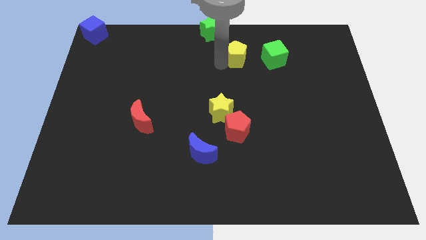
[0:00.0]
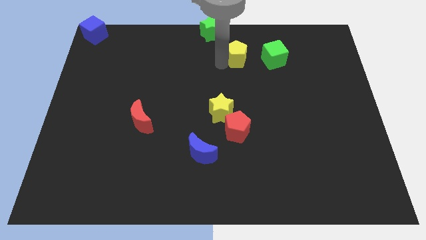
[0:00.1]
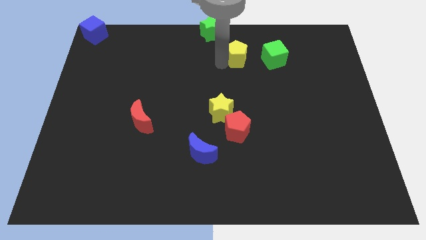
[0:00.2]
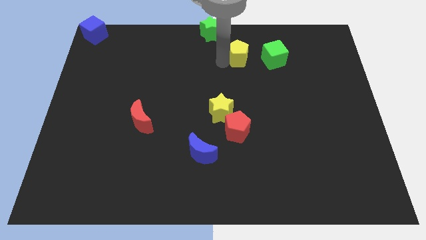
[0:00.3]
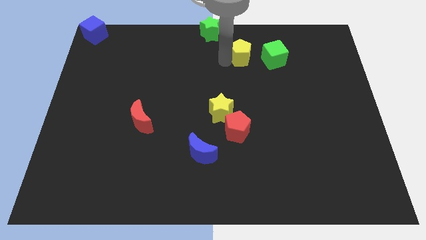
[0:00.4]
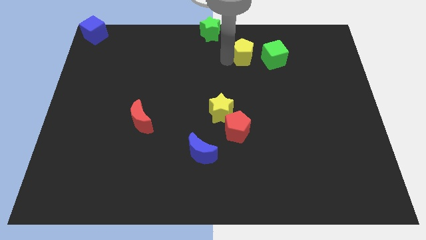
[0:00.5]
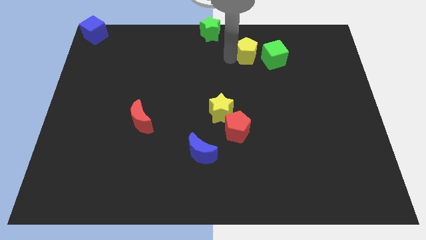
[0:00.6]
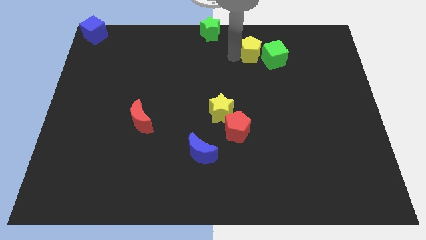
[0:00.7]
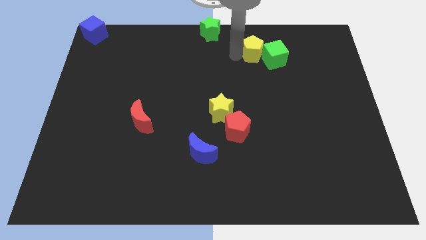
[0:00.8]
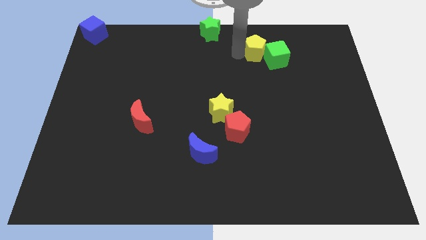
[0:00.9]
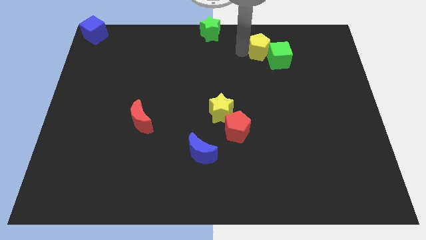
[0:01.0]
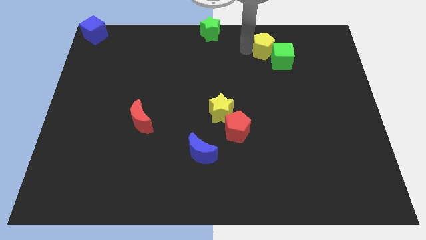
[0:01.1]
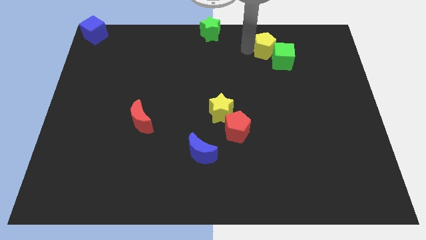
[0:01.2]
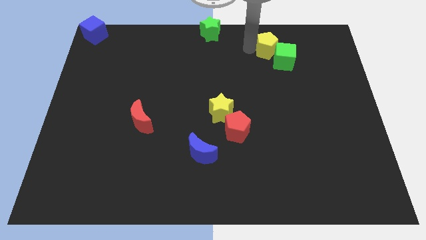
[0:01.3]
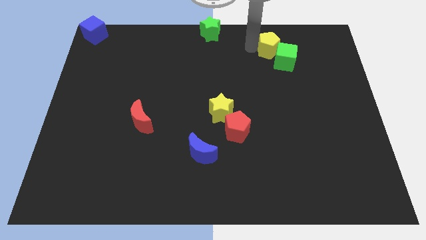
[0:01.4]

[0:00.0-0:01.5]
place the yellow pentagon on top of green cube

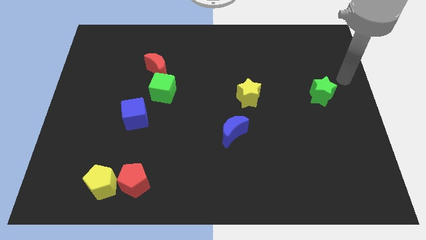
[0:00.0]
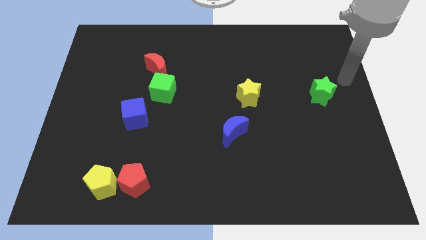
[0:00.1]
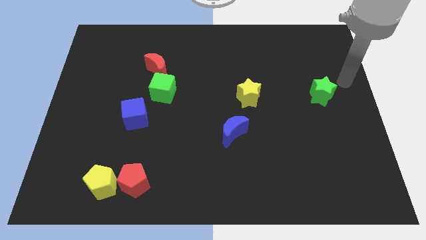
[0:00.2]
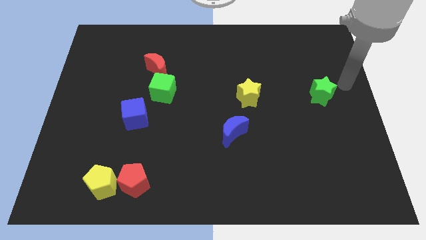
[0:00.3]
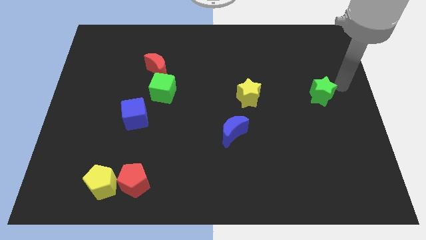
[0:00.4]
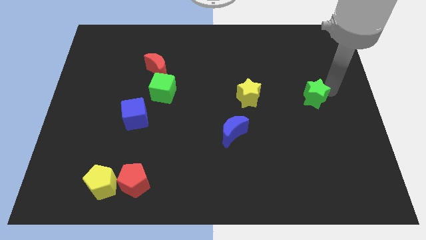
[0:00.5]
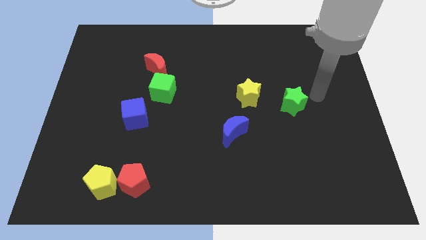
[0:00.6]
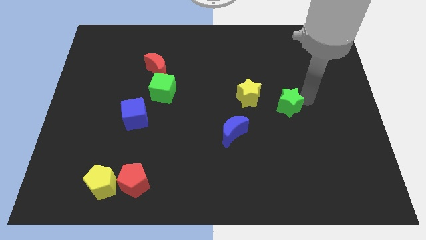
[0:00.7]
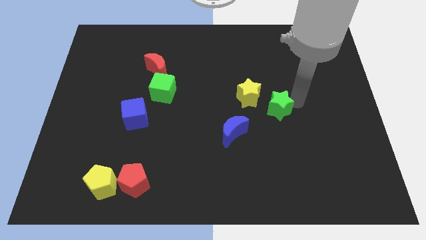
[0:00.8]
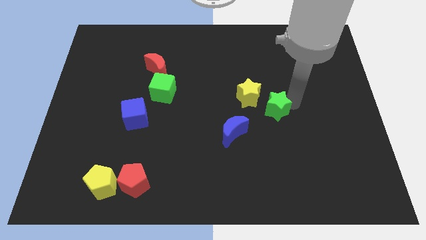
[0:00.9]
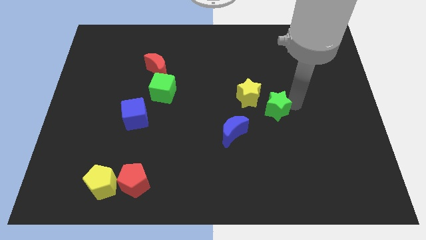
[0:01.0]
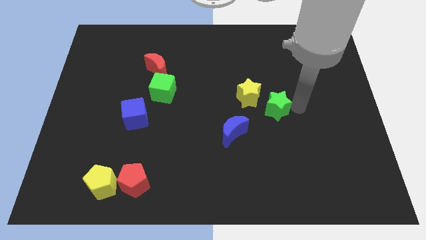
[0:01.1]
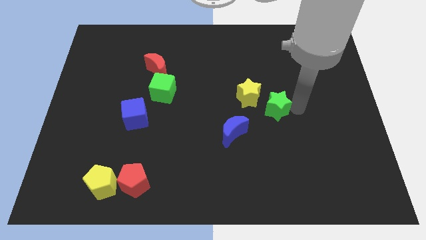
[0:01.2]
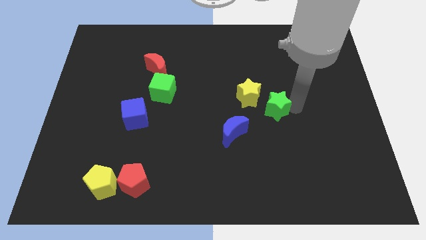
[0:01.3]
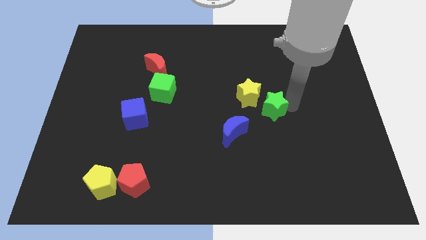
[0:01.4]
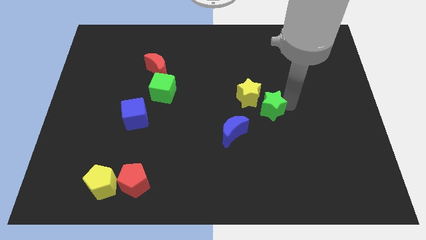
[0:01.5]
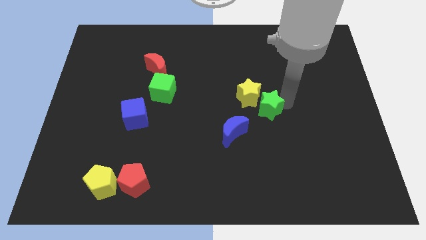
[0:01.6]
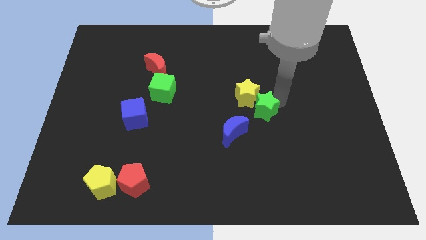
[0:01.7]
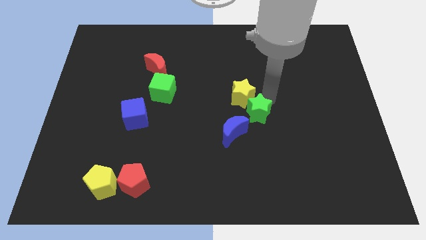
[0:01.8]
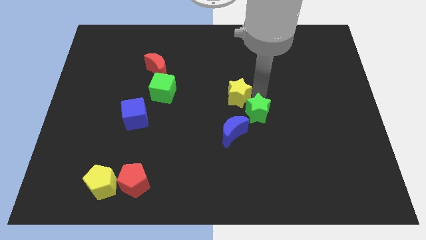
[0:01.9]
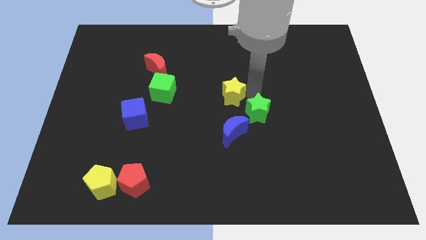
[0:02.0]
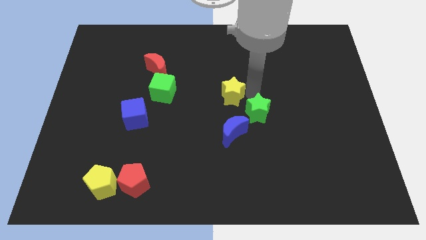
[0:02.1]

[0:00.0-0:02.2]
push green star into the yellow star

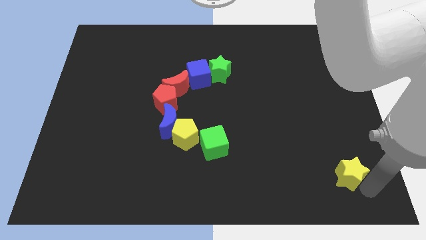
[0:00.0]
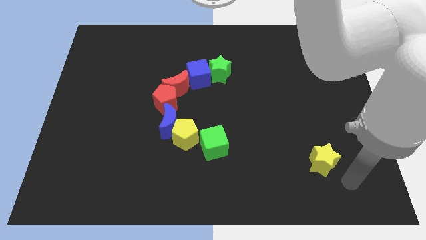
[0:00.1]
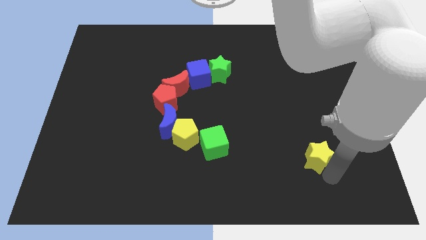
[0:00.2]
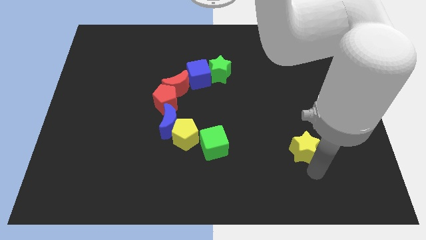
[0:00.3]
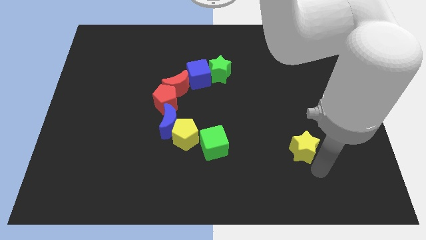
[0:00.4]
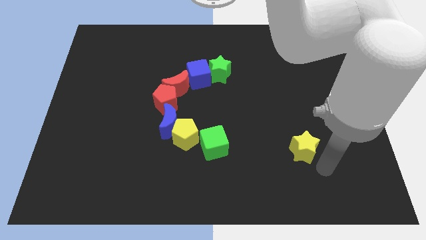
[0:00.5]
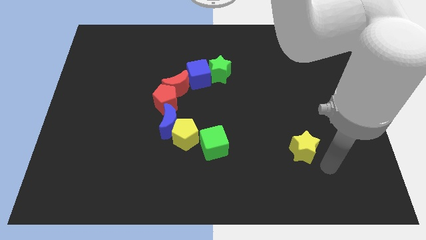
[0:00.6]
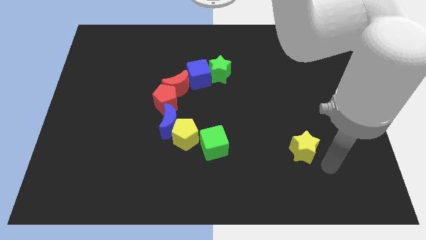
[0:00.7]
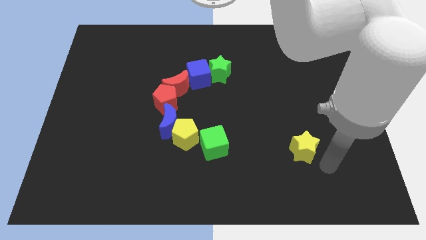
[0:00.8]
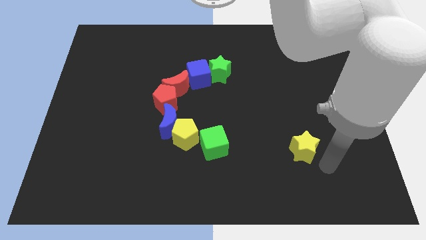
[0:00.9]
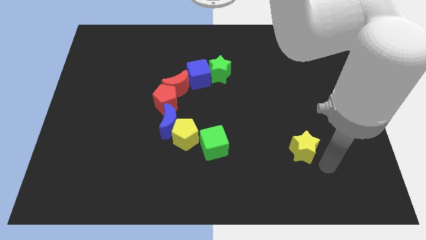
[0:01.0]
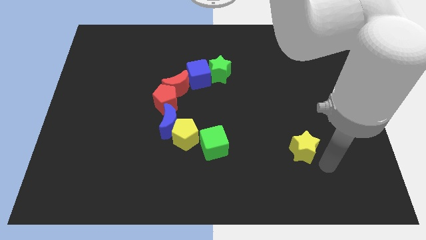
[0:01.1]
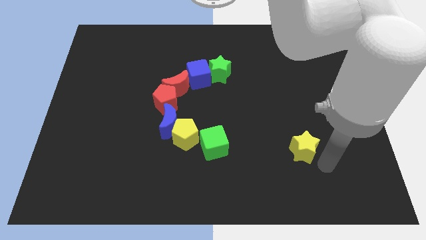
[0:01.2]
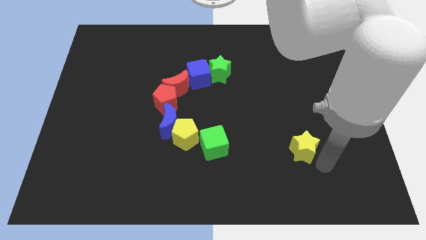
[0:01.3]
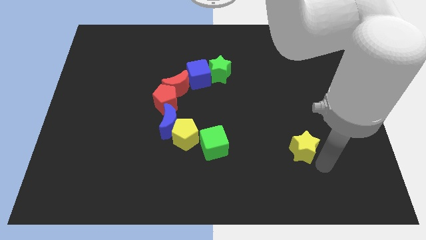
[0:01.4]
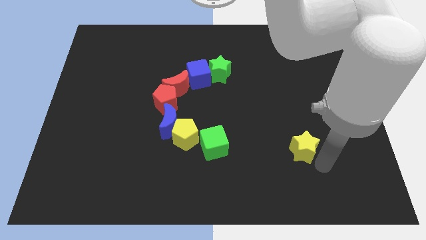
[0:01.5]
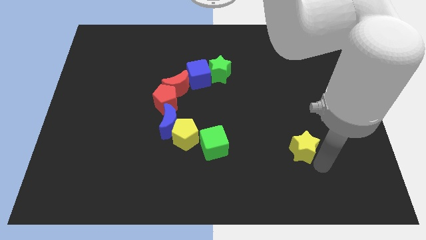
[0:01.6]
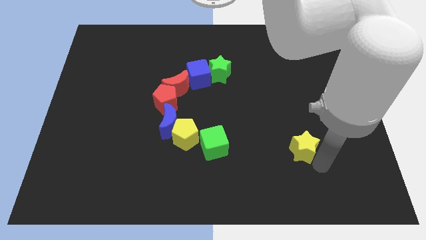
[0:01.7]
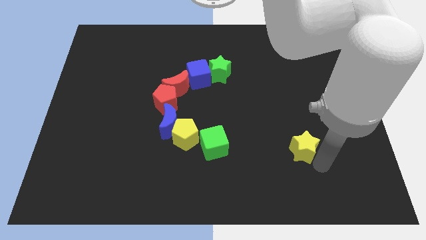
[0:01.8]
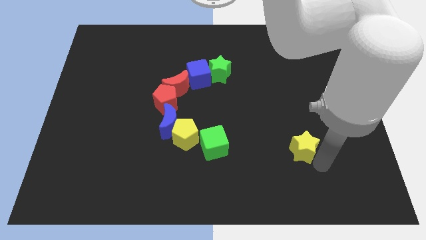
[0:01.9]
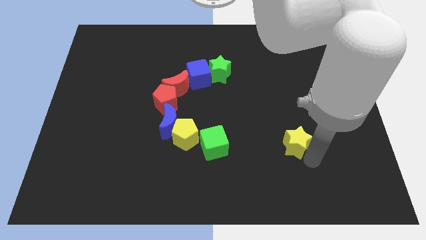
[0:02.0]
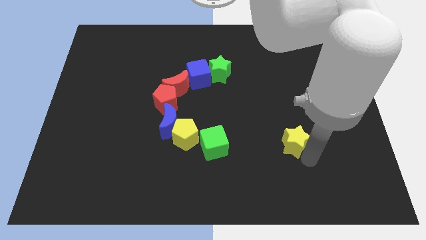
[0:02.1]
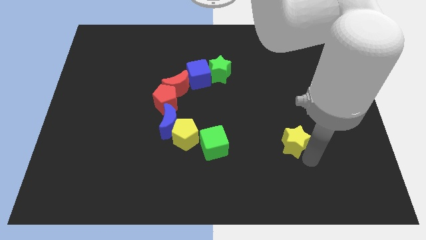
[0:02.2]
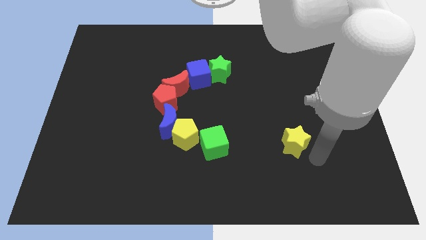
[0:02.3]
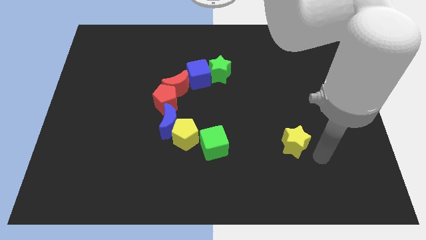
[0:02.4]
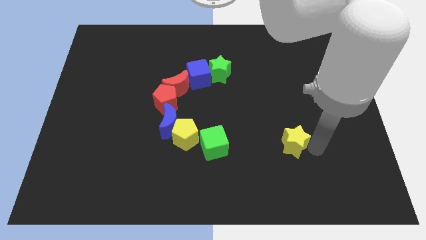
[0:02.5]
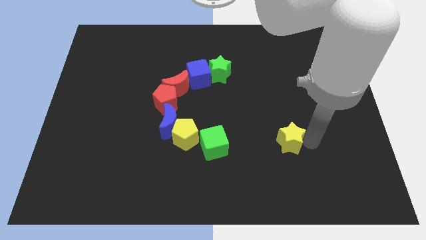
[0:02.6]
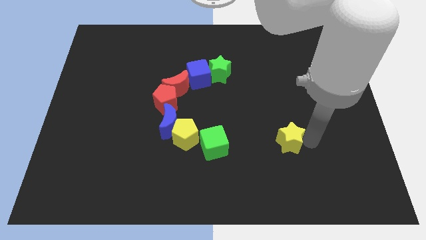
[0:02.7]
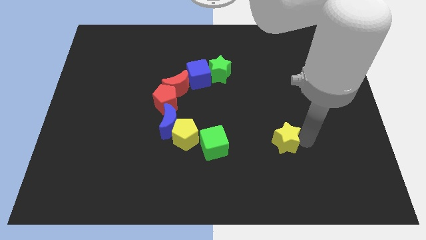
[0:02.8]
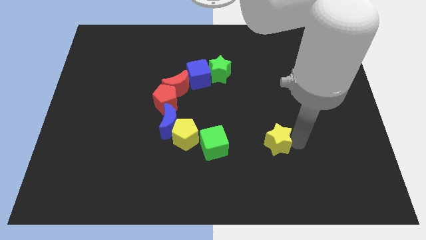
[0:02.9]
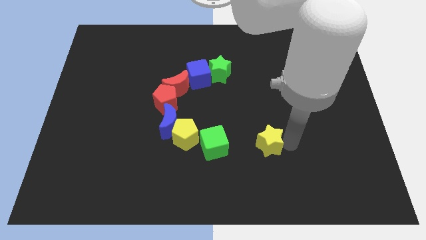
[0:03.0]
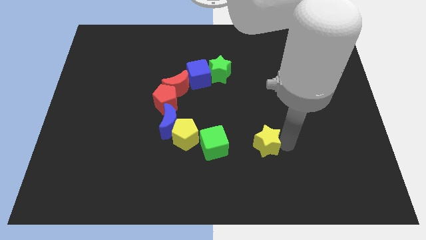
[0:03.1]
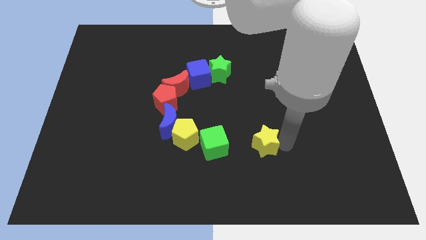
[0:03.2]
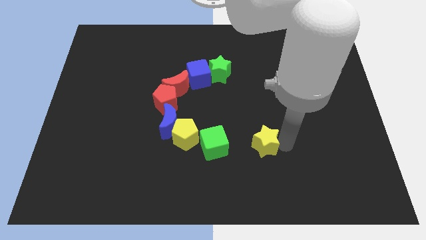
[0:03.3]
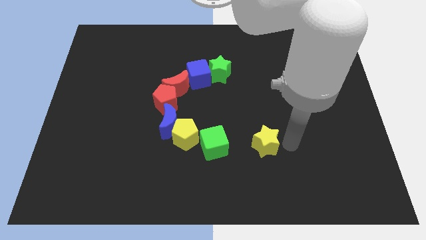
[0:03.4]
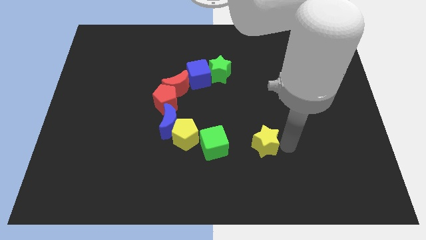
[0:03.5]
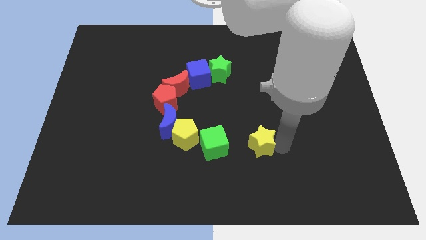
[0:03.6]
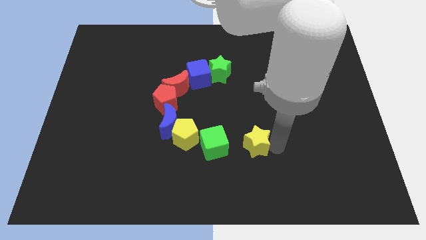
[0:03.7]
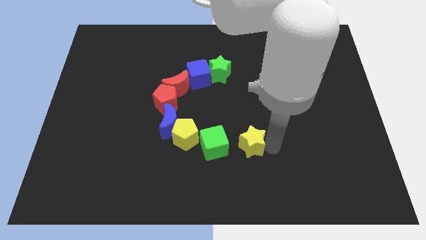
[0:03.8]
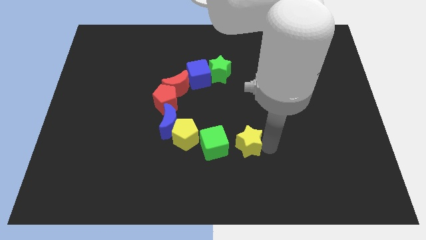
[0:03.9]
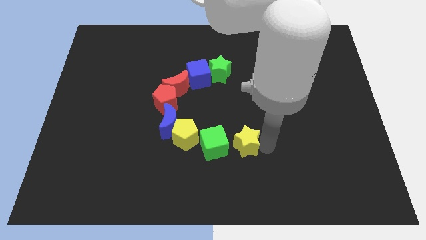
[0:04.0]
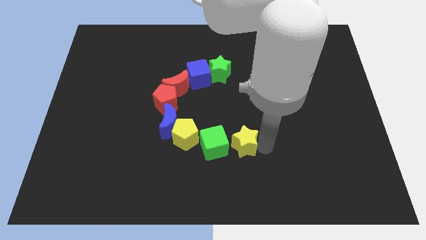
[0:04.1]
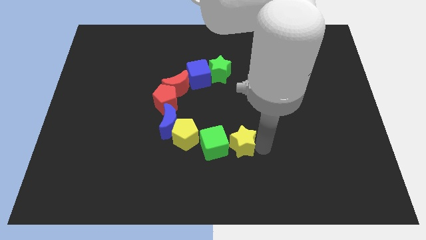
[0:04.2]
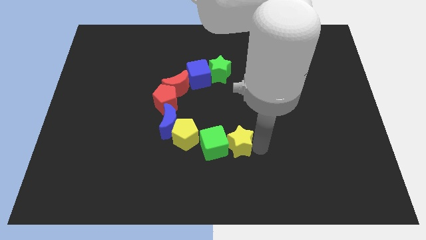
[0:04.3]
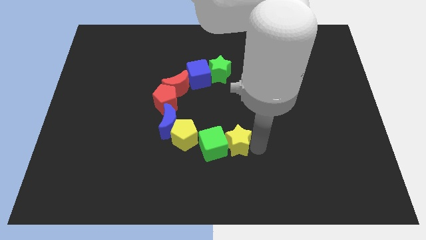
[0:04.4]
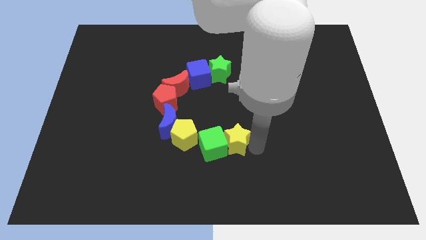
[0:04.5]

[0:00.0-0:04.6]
move the yellow star to the right of the green cube

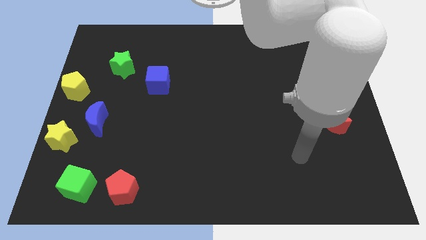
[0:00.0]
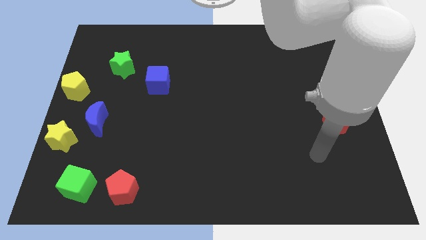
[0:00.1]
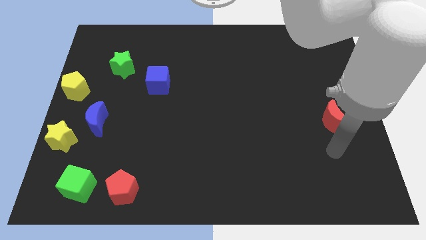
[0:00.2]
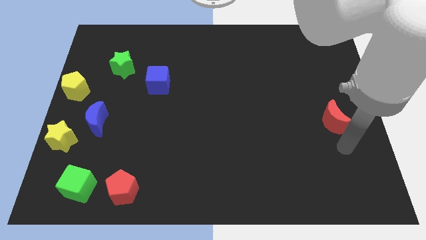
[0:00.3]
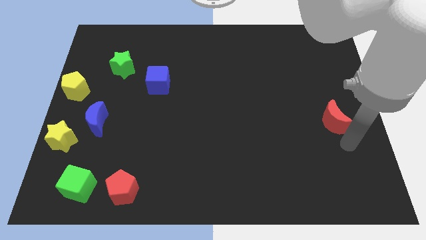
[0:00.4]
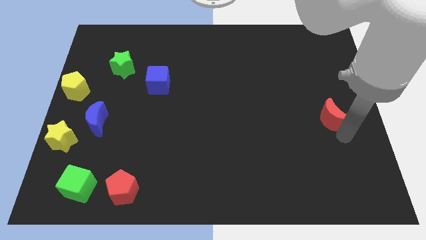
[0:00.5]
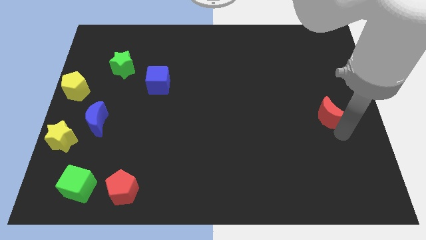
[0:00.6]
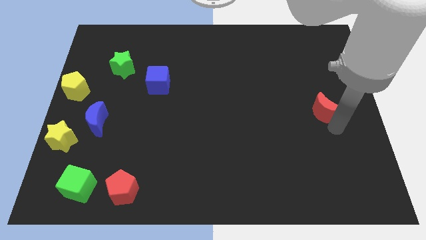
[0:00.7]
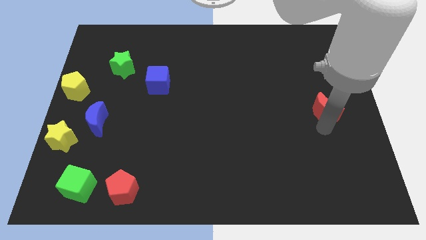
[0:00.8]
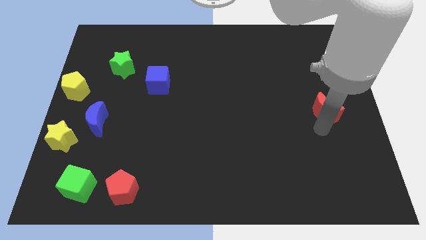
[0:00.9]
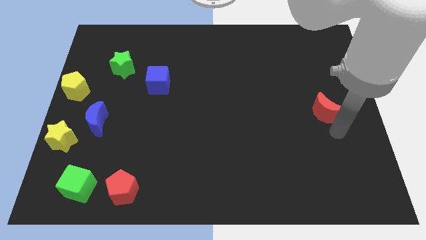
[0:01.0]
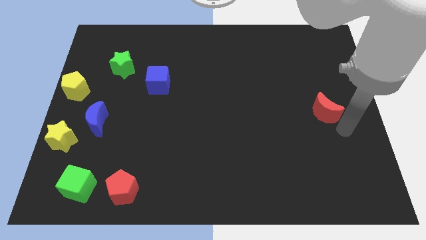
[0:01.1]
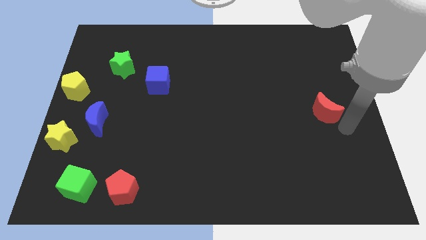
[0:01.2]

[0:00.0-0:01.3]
slightly push the red moon towards the center right of the board
